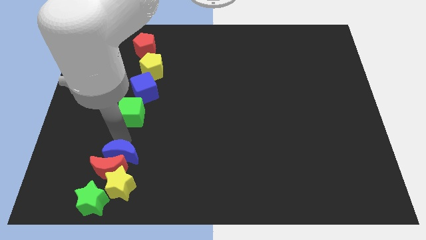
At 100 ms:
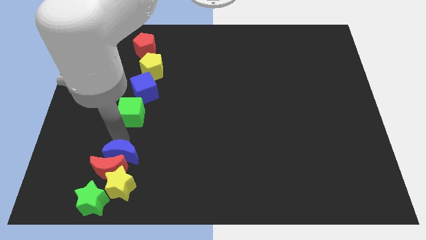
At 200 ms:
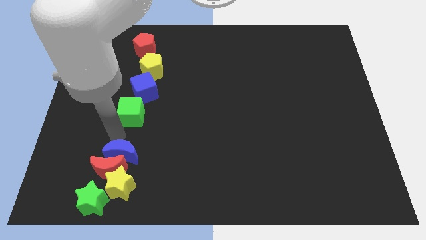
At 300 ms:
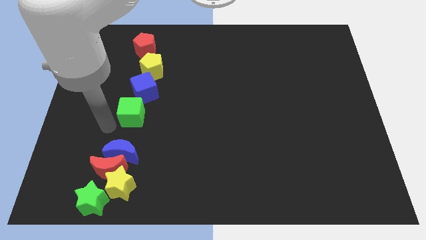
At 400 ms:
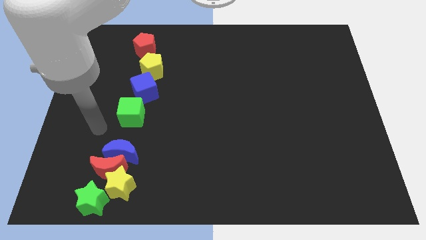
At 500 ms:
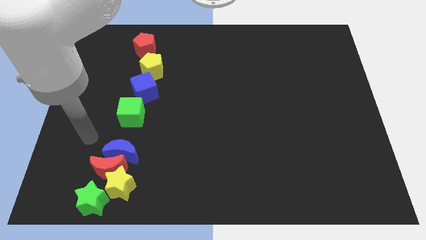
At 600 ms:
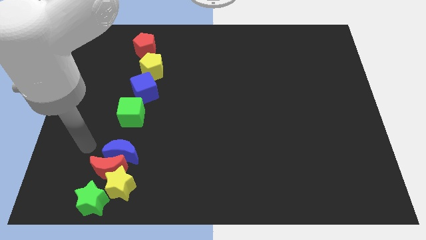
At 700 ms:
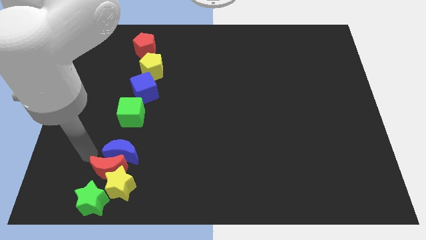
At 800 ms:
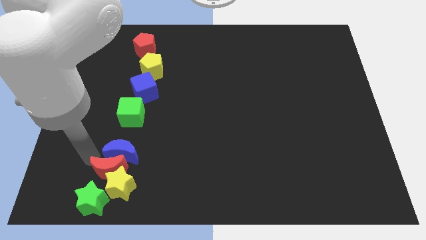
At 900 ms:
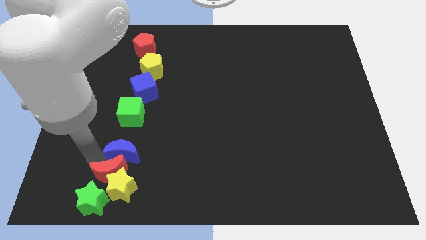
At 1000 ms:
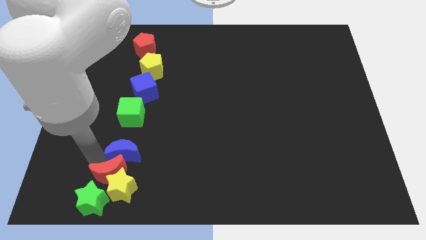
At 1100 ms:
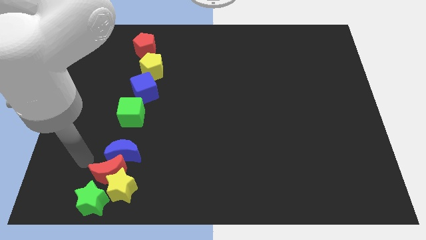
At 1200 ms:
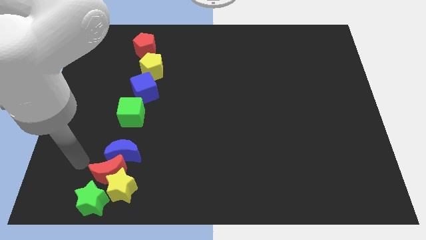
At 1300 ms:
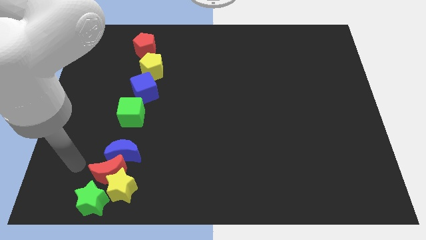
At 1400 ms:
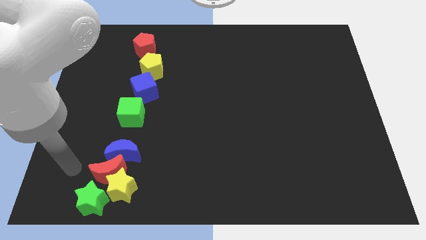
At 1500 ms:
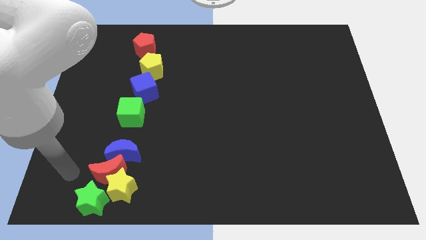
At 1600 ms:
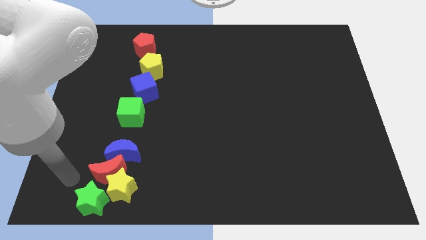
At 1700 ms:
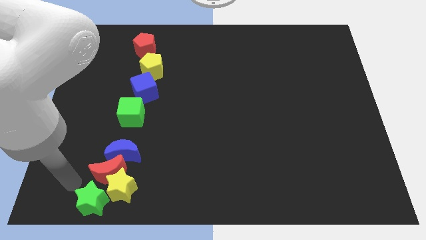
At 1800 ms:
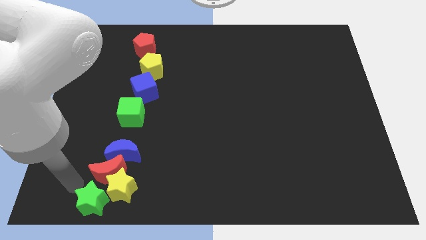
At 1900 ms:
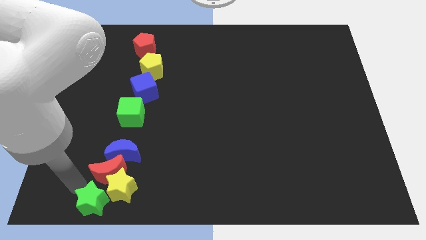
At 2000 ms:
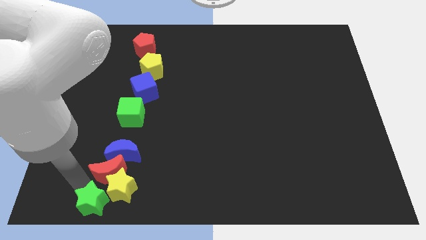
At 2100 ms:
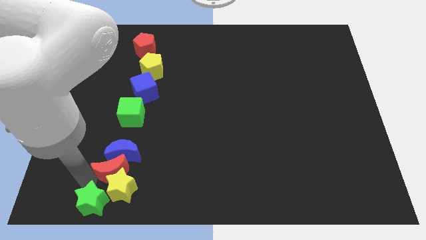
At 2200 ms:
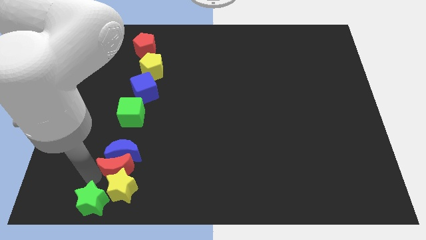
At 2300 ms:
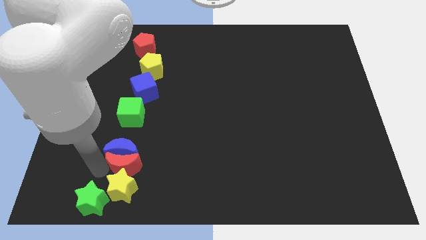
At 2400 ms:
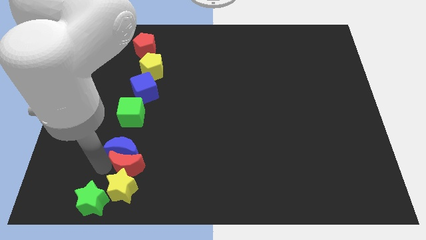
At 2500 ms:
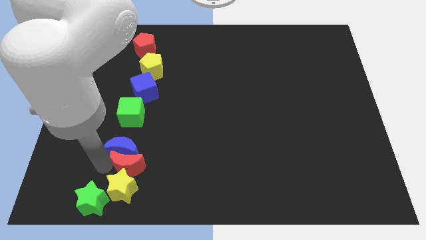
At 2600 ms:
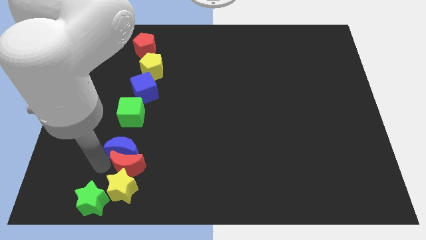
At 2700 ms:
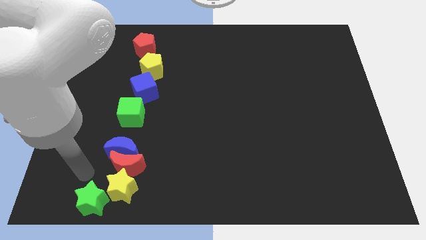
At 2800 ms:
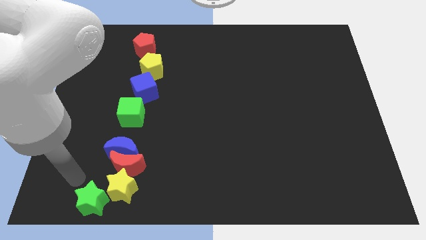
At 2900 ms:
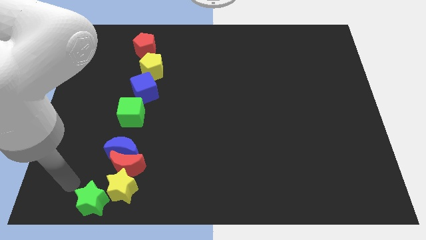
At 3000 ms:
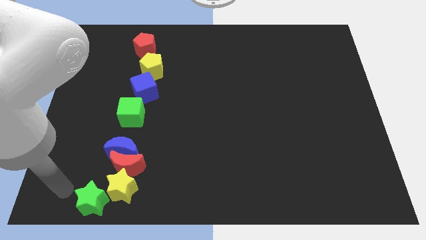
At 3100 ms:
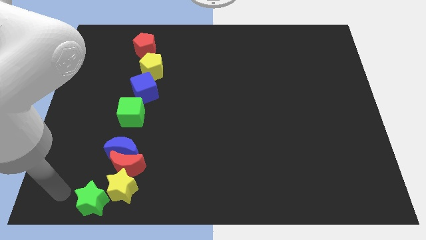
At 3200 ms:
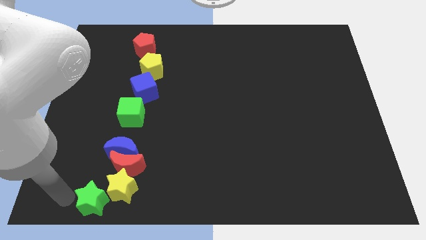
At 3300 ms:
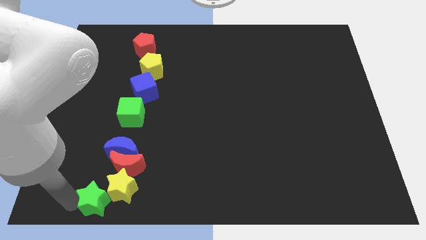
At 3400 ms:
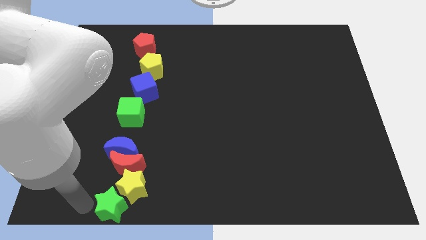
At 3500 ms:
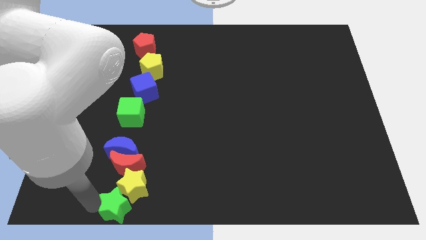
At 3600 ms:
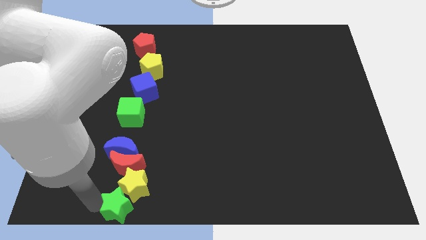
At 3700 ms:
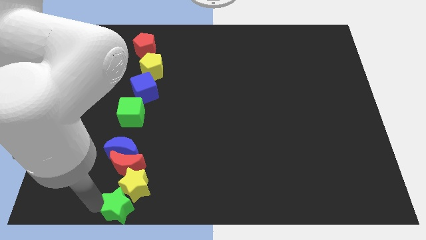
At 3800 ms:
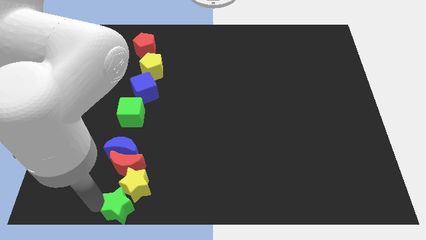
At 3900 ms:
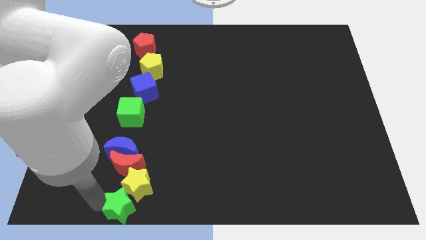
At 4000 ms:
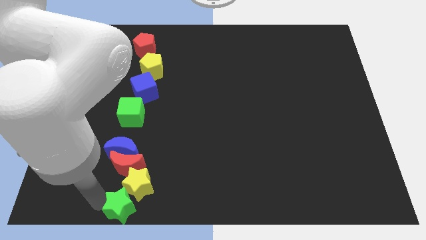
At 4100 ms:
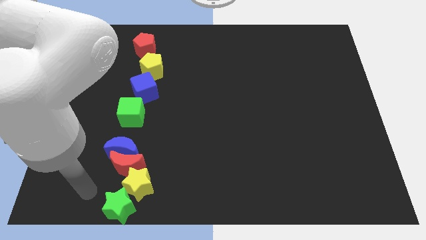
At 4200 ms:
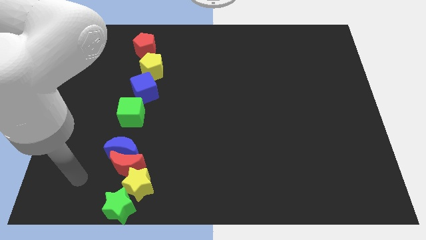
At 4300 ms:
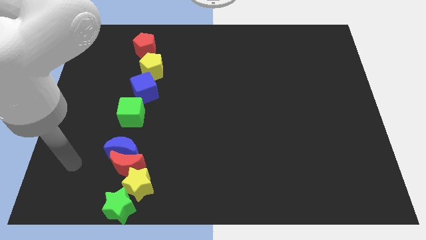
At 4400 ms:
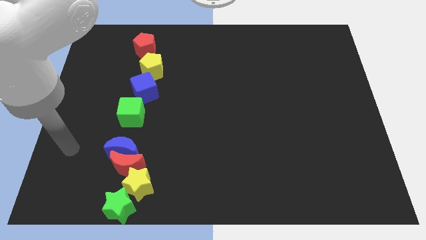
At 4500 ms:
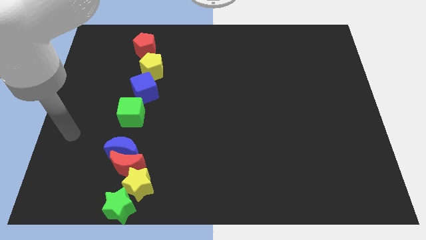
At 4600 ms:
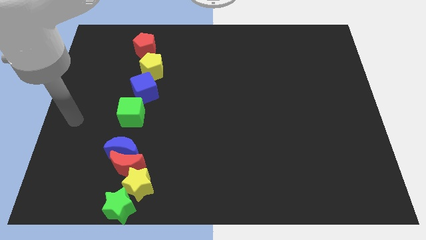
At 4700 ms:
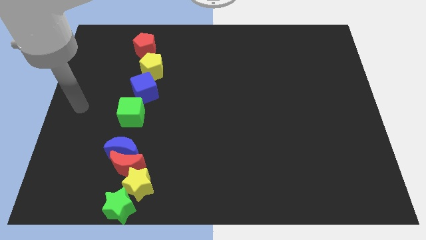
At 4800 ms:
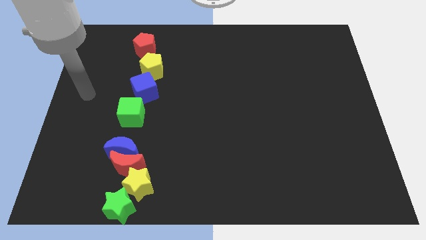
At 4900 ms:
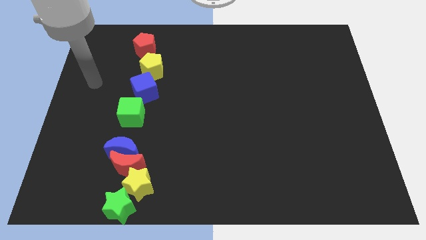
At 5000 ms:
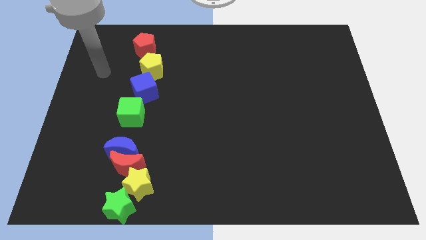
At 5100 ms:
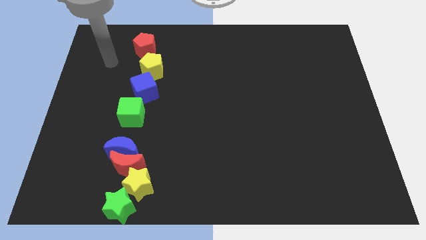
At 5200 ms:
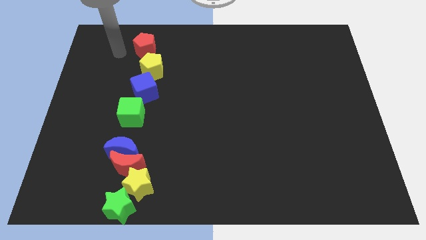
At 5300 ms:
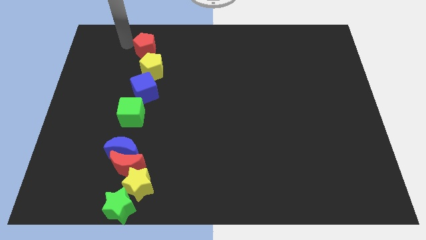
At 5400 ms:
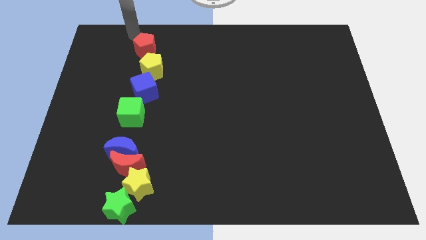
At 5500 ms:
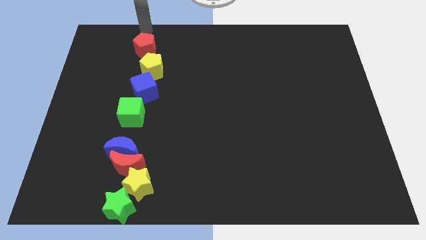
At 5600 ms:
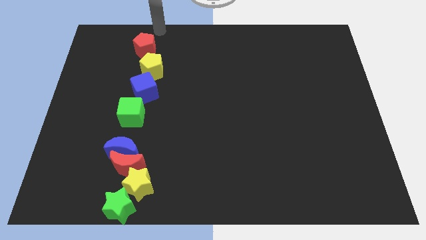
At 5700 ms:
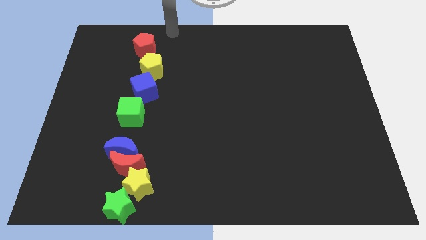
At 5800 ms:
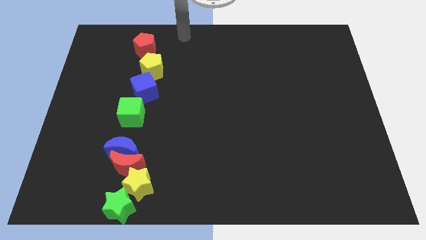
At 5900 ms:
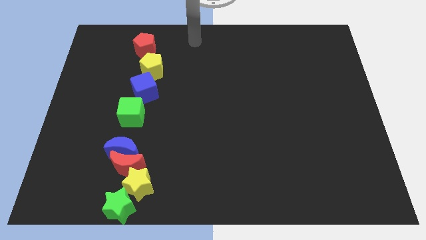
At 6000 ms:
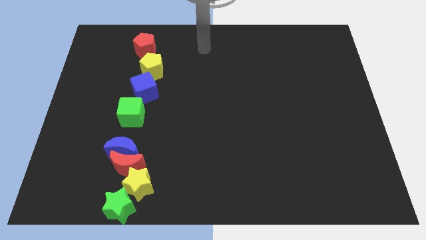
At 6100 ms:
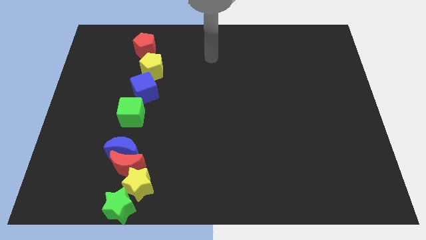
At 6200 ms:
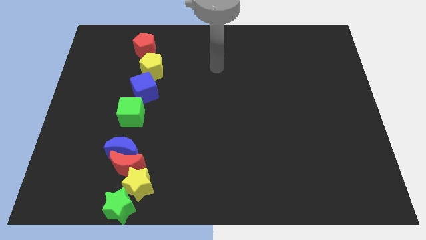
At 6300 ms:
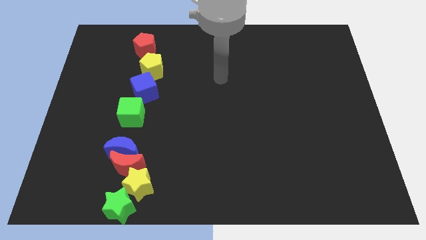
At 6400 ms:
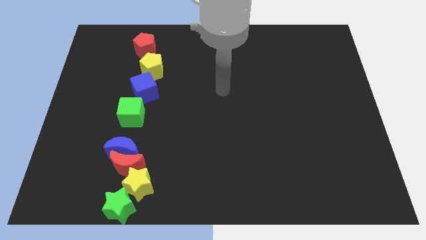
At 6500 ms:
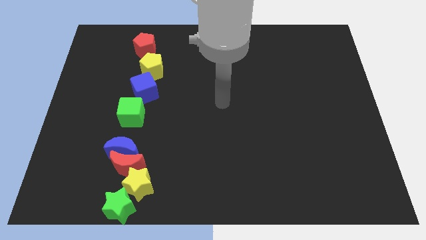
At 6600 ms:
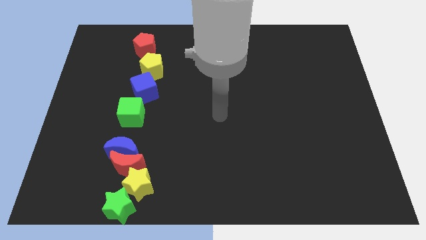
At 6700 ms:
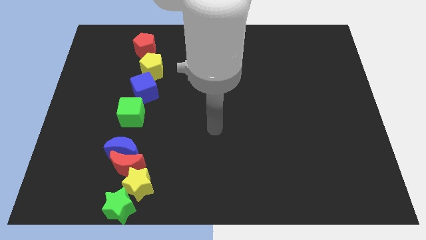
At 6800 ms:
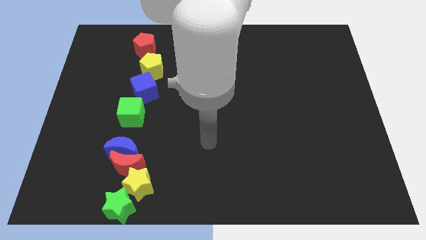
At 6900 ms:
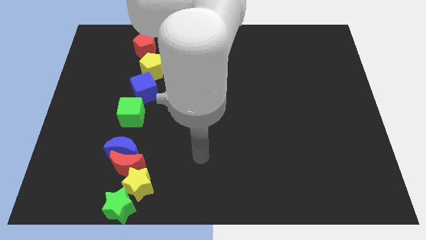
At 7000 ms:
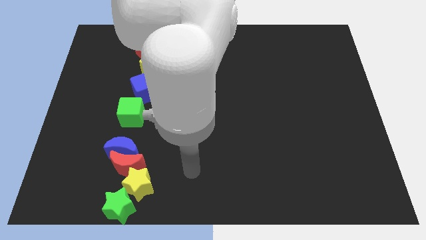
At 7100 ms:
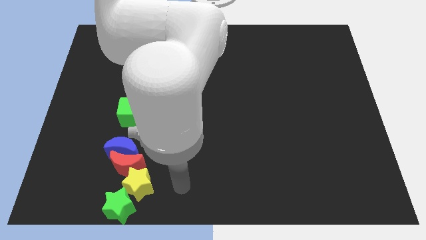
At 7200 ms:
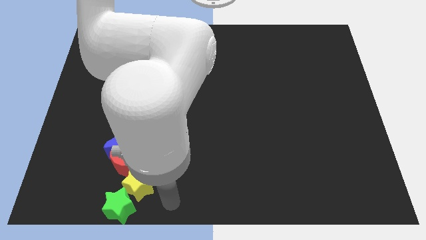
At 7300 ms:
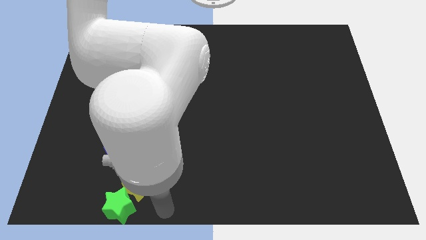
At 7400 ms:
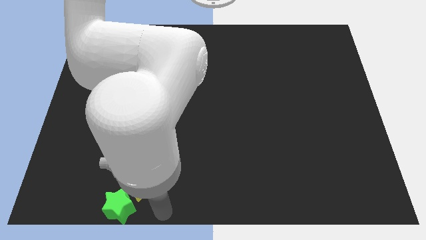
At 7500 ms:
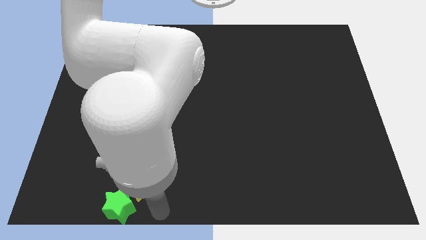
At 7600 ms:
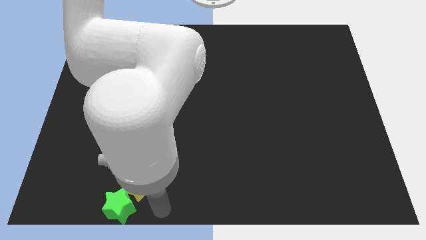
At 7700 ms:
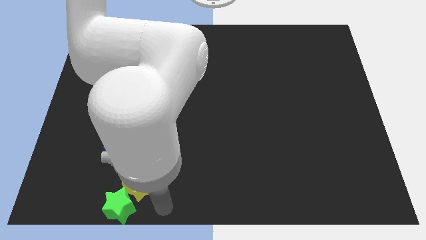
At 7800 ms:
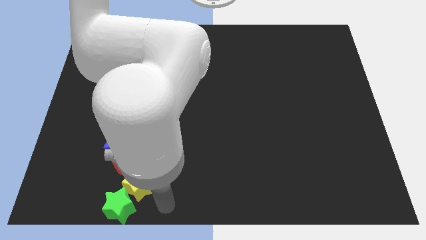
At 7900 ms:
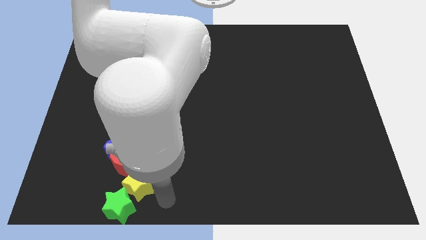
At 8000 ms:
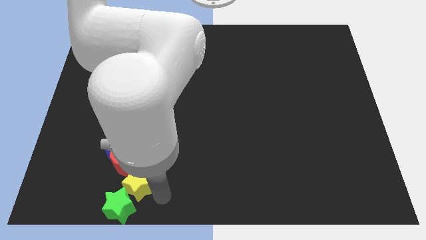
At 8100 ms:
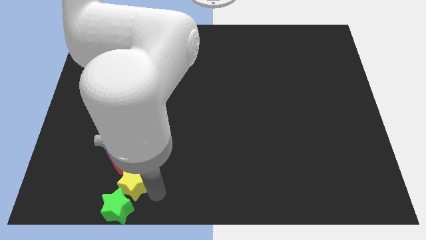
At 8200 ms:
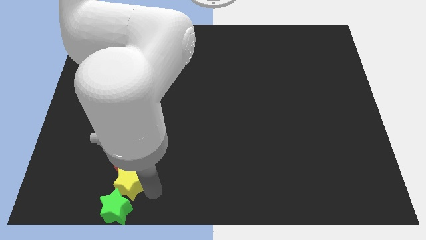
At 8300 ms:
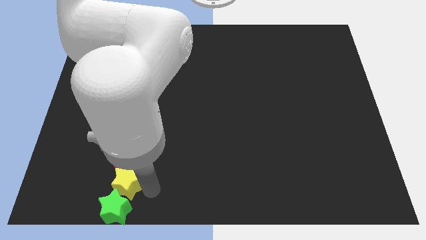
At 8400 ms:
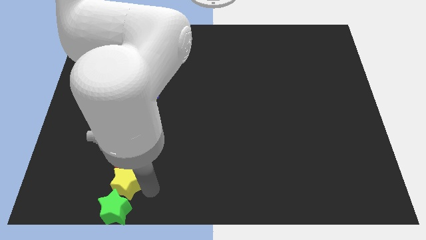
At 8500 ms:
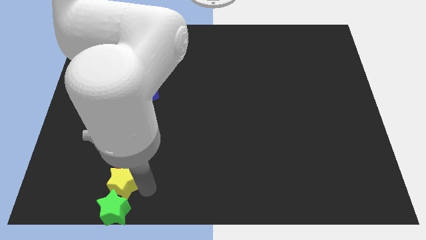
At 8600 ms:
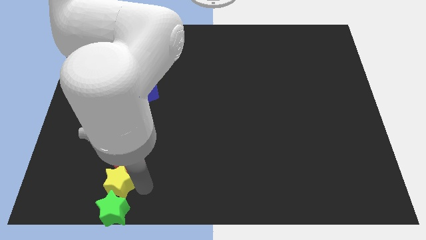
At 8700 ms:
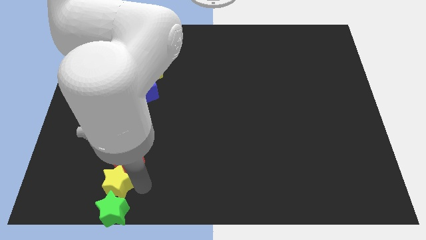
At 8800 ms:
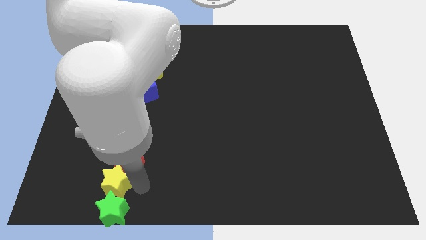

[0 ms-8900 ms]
arrange all the blocks to form a vertical line

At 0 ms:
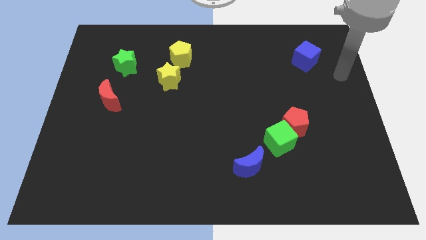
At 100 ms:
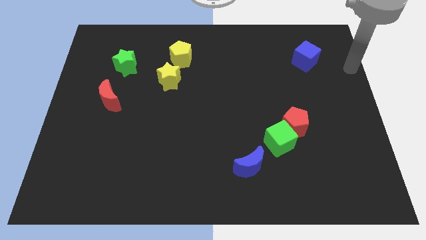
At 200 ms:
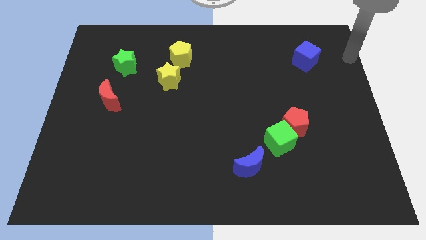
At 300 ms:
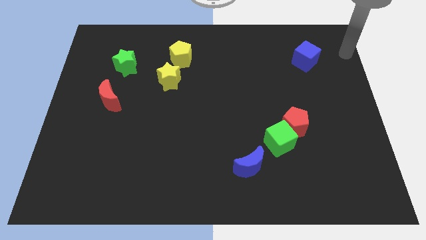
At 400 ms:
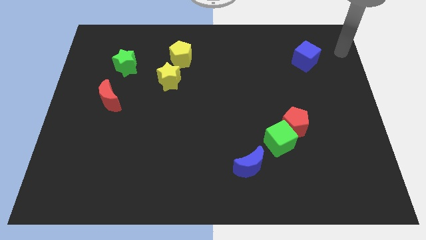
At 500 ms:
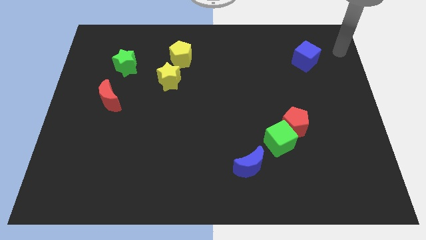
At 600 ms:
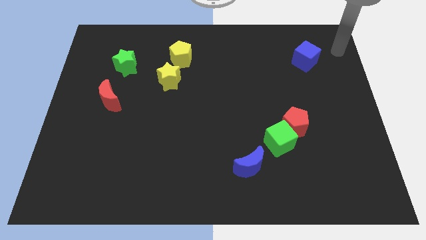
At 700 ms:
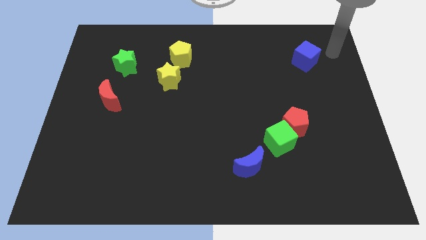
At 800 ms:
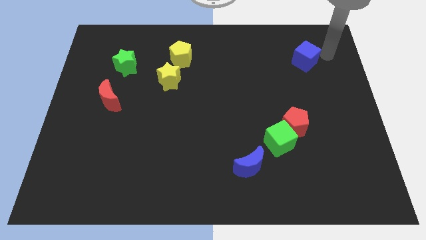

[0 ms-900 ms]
place the arm near the blue cube
